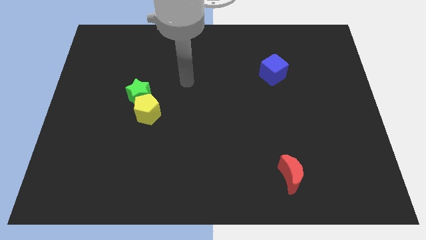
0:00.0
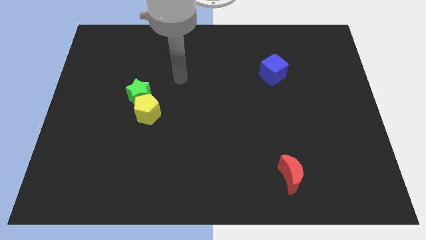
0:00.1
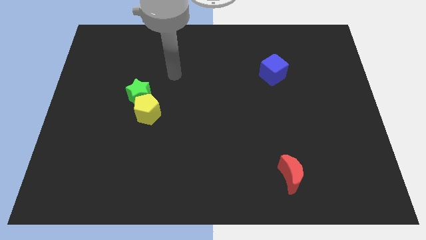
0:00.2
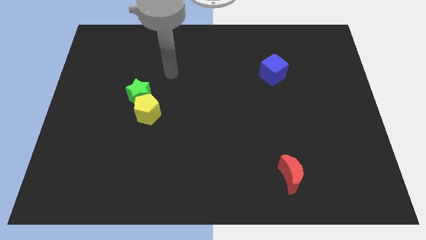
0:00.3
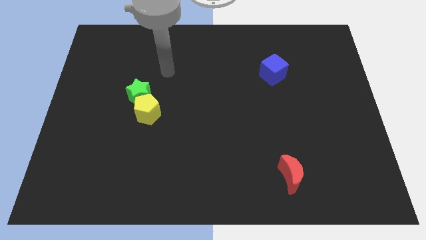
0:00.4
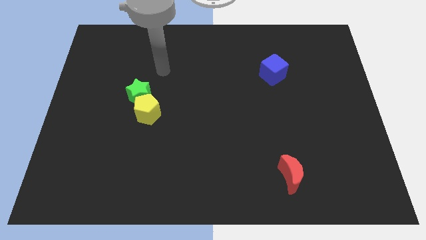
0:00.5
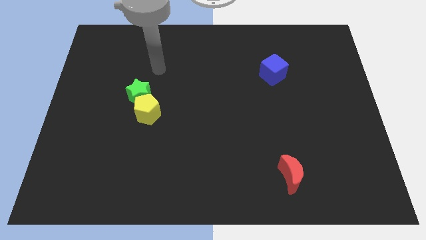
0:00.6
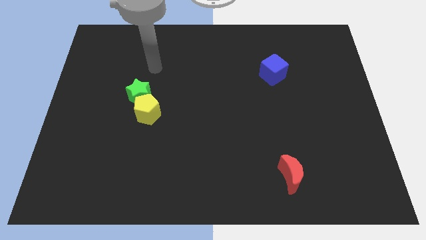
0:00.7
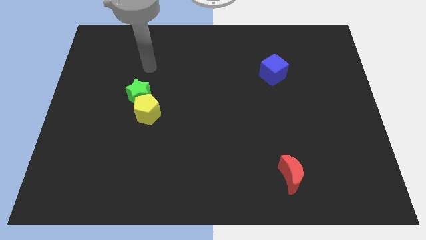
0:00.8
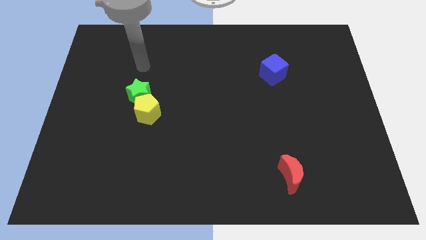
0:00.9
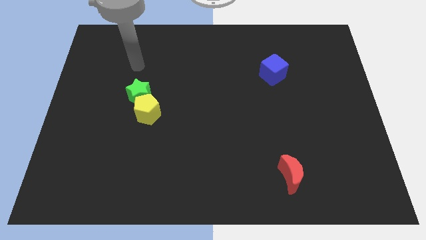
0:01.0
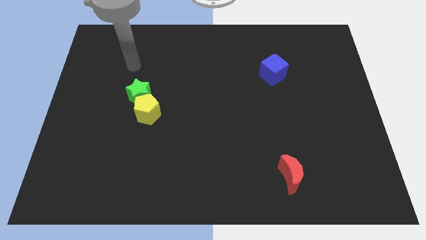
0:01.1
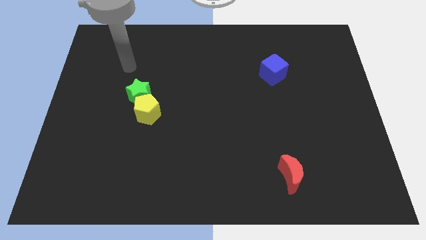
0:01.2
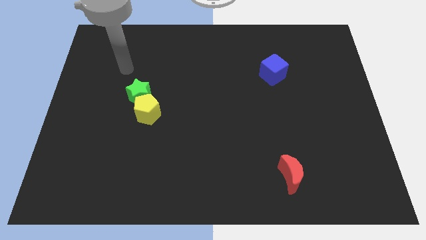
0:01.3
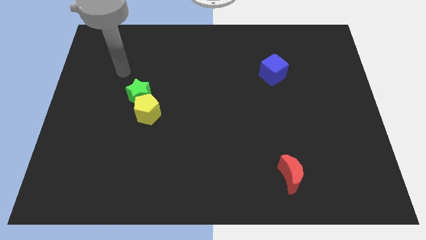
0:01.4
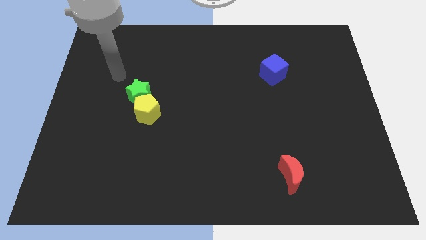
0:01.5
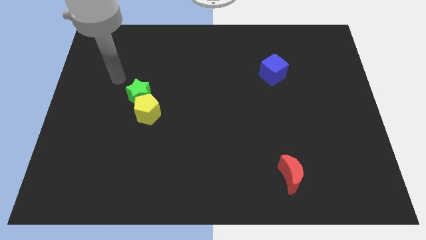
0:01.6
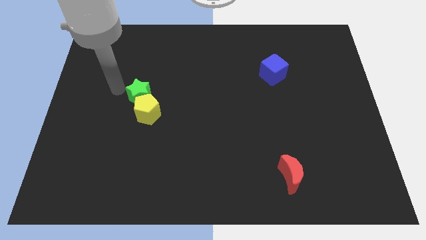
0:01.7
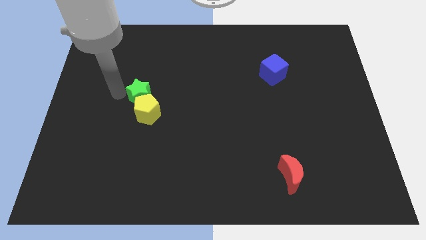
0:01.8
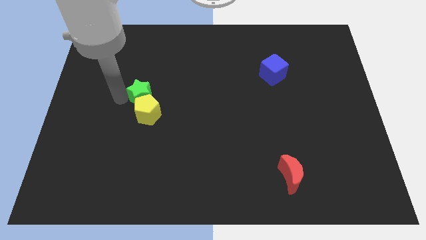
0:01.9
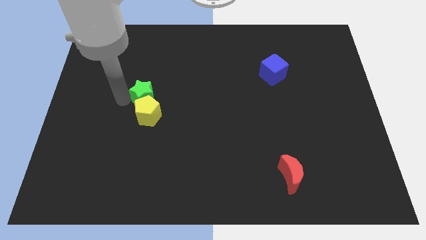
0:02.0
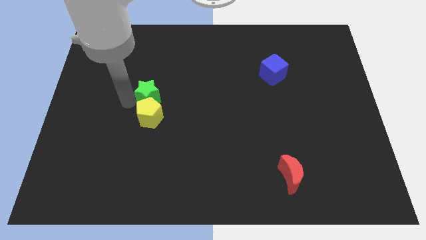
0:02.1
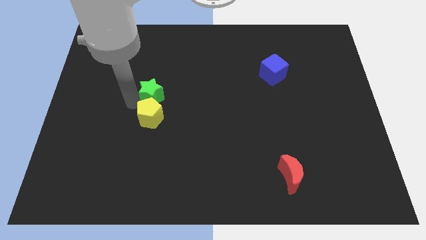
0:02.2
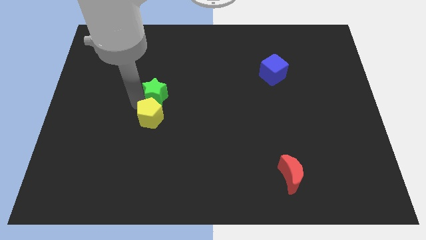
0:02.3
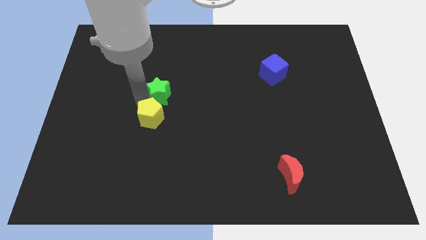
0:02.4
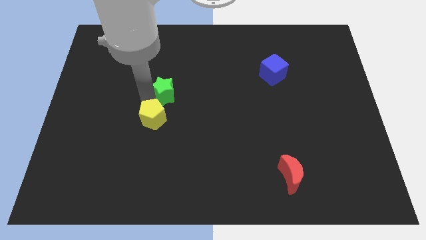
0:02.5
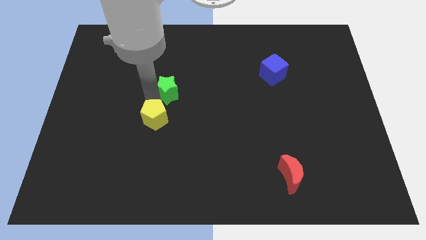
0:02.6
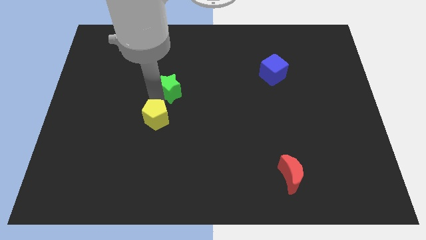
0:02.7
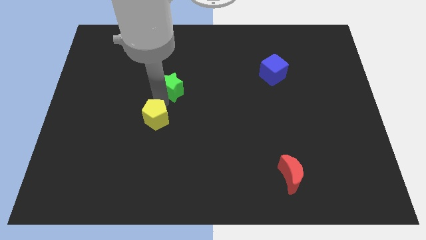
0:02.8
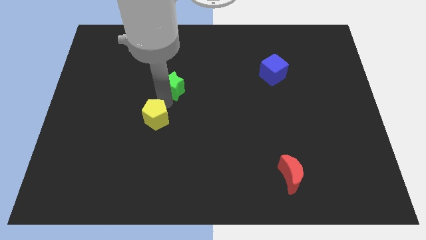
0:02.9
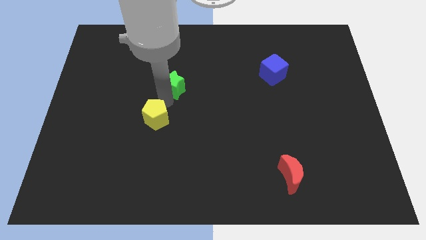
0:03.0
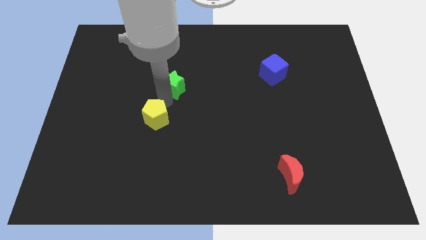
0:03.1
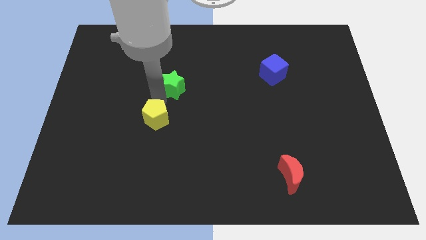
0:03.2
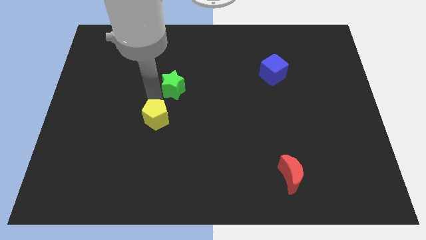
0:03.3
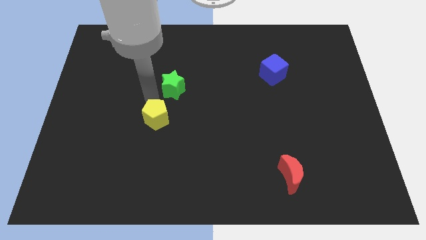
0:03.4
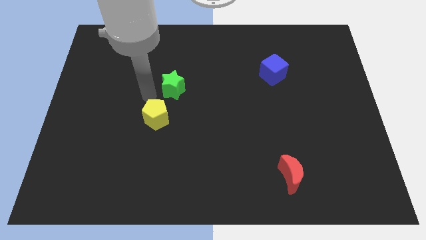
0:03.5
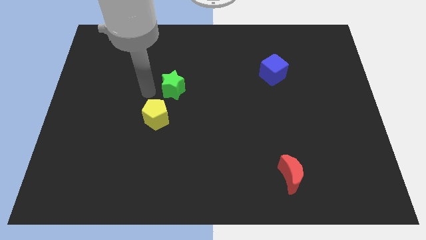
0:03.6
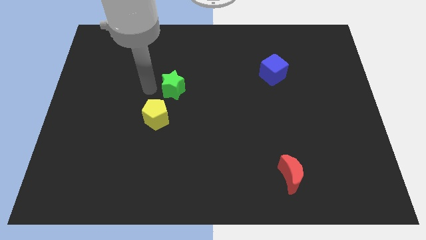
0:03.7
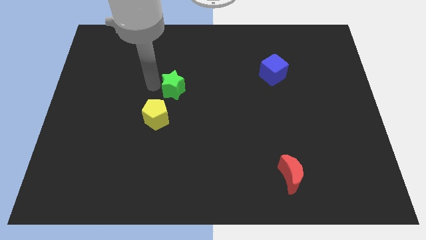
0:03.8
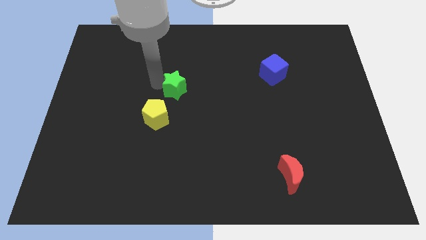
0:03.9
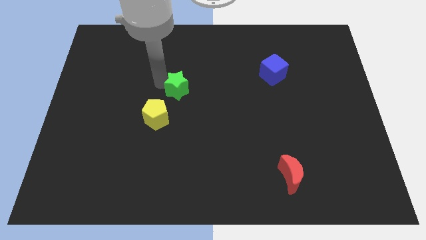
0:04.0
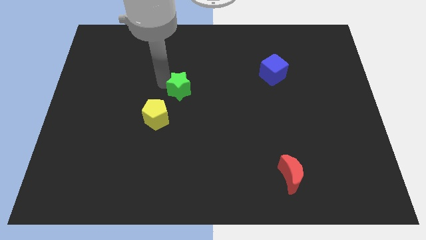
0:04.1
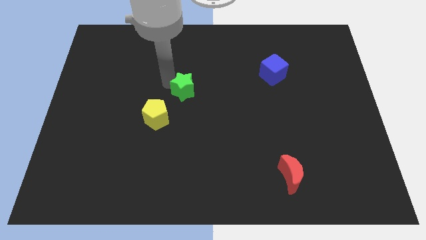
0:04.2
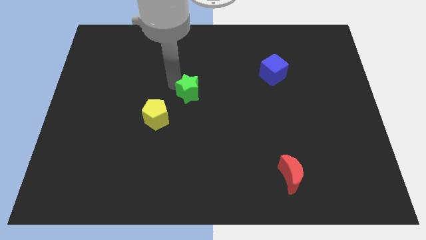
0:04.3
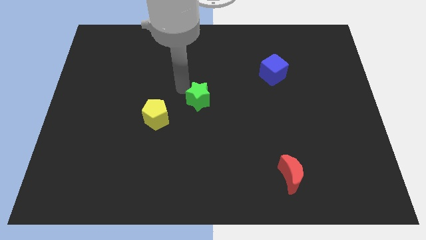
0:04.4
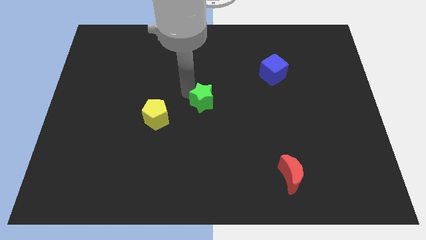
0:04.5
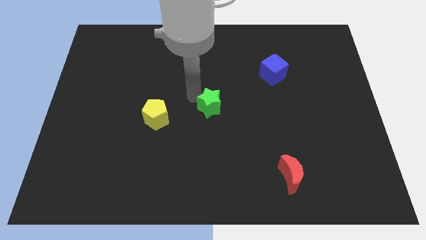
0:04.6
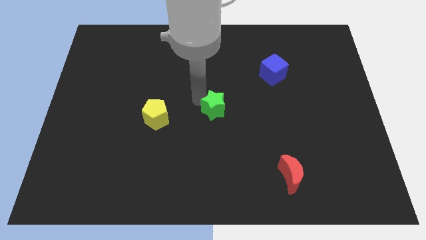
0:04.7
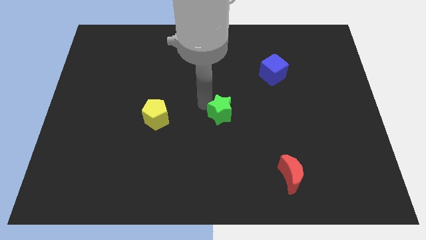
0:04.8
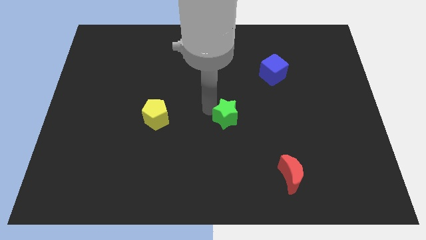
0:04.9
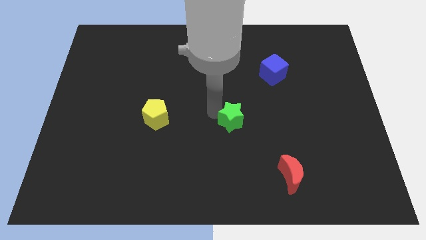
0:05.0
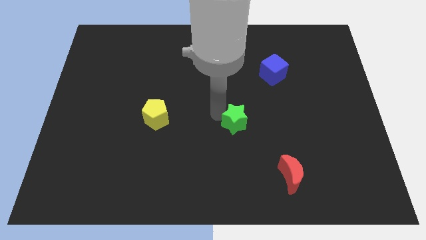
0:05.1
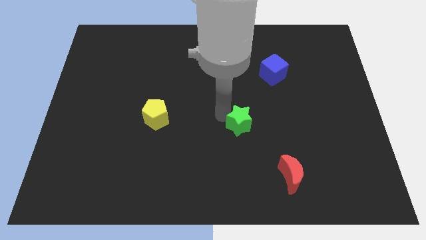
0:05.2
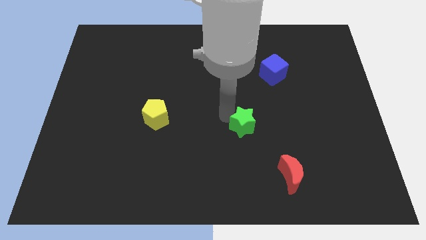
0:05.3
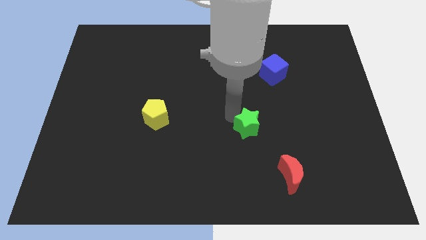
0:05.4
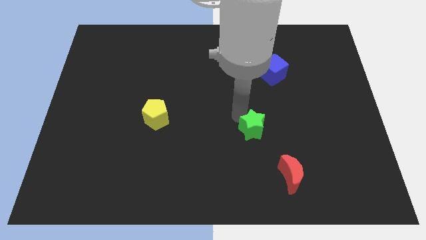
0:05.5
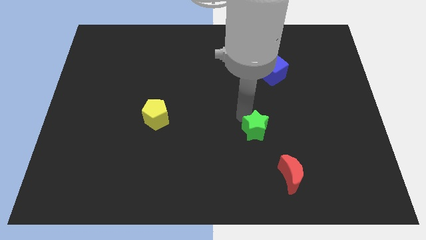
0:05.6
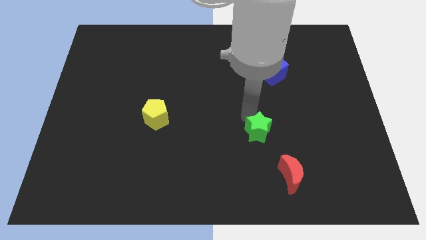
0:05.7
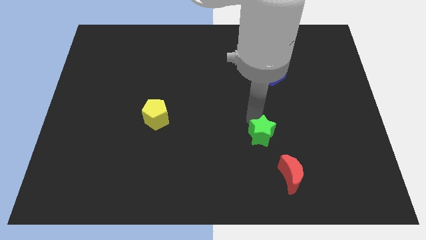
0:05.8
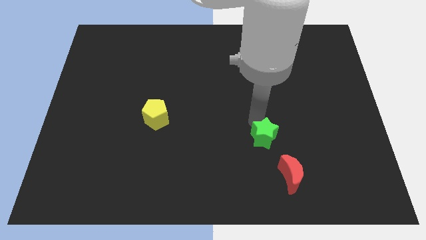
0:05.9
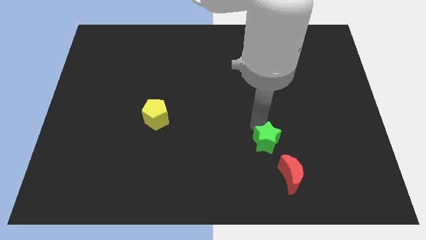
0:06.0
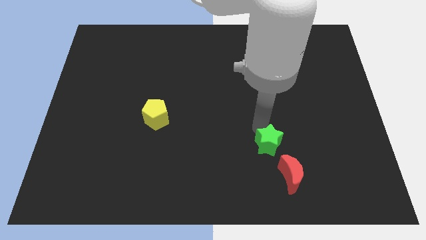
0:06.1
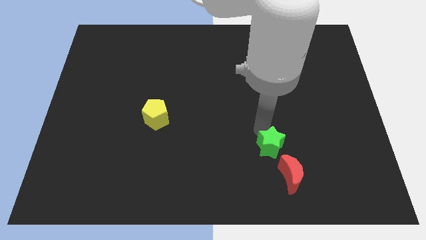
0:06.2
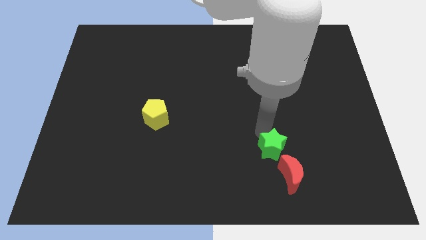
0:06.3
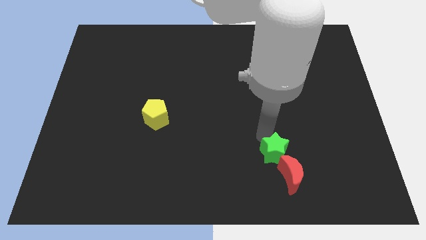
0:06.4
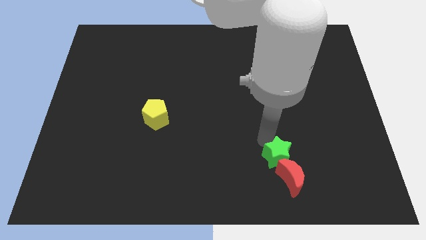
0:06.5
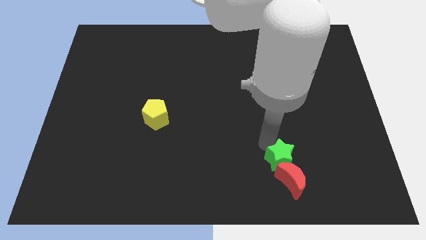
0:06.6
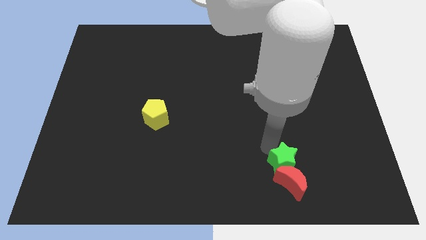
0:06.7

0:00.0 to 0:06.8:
put the green star to the red moon

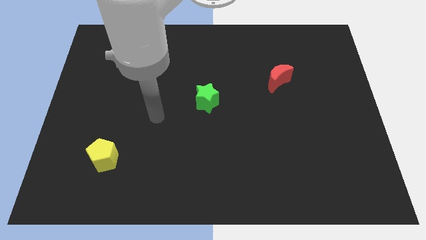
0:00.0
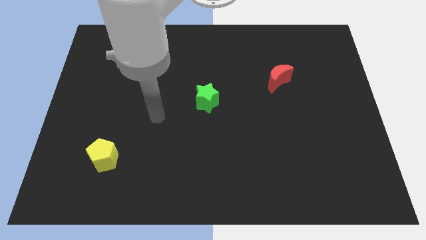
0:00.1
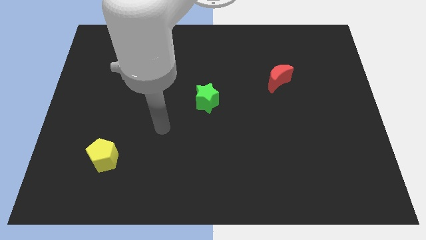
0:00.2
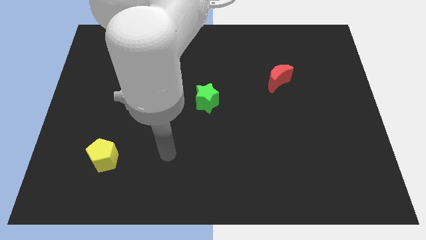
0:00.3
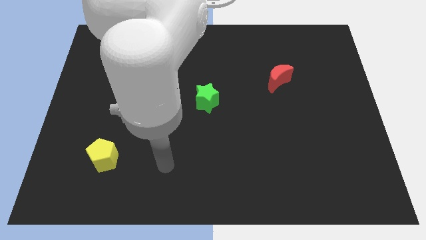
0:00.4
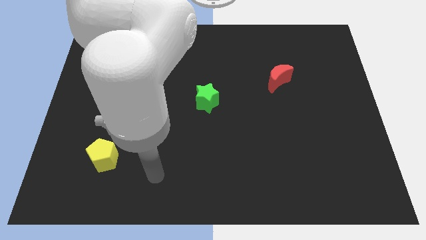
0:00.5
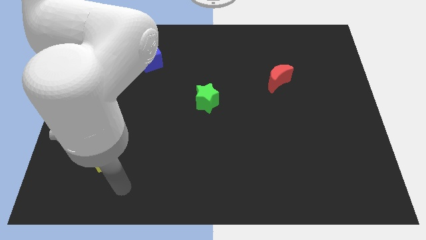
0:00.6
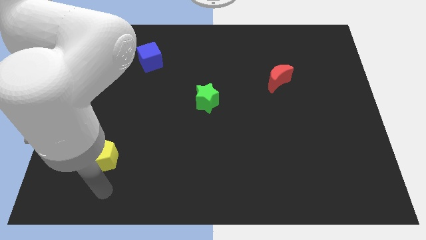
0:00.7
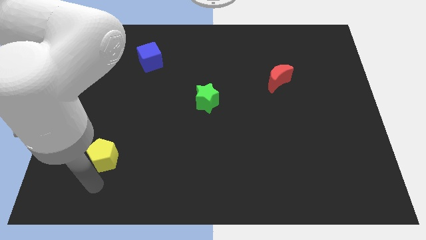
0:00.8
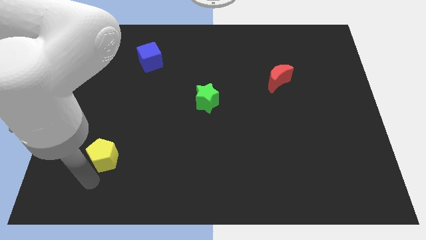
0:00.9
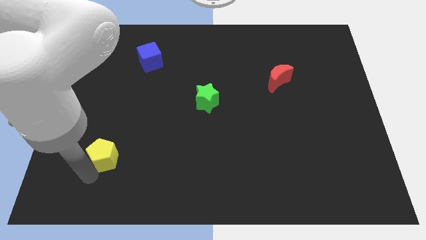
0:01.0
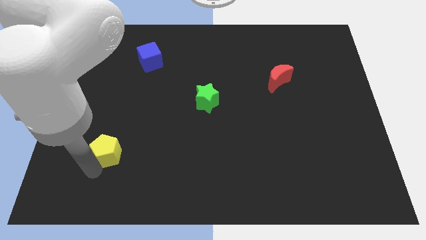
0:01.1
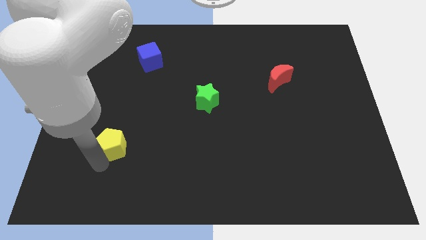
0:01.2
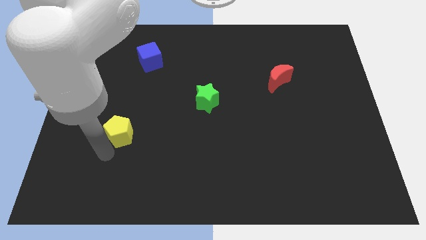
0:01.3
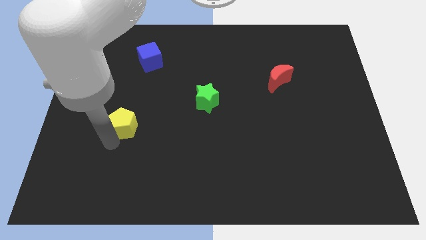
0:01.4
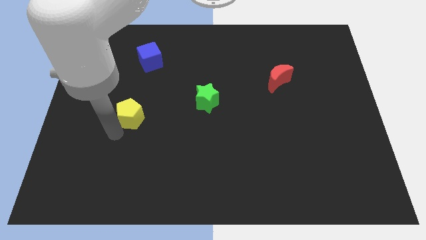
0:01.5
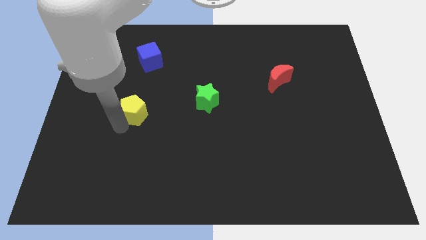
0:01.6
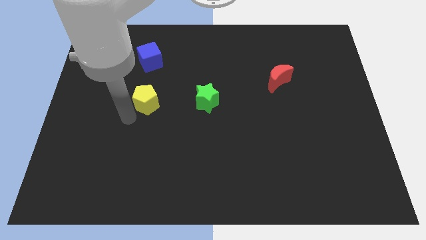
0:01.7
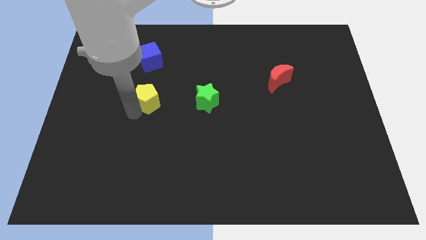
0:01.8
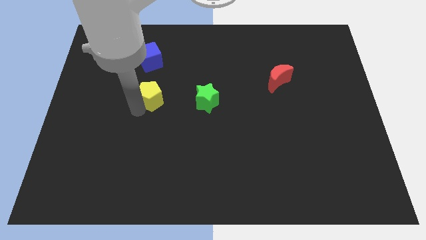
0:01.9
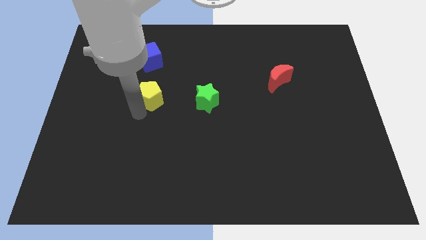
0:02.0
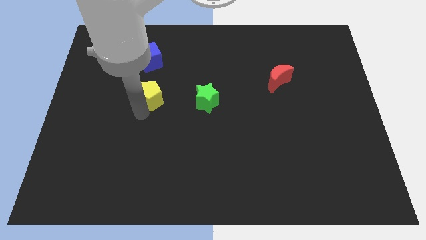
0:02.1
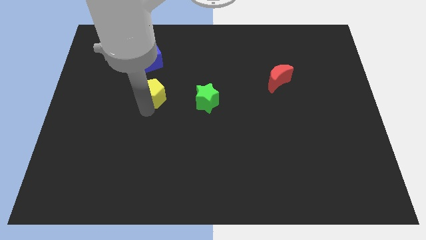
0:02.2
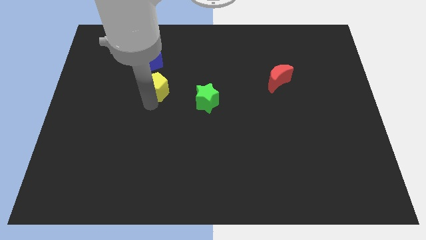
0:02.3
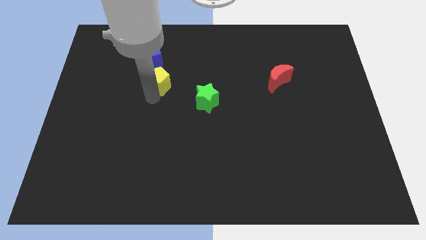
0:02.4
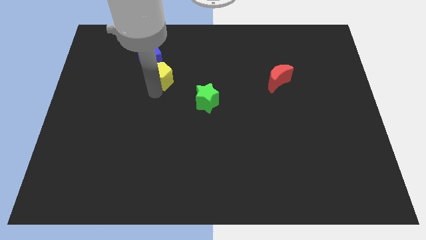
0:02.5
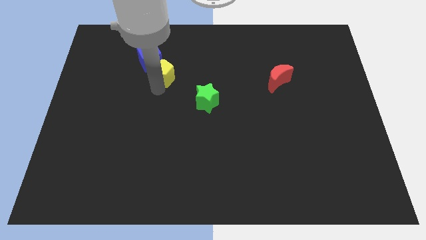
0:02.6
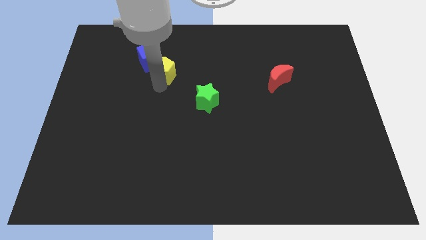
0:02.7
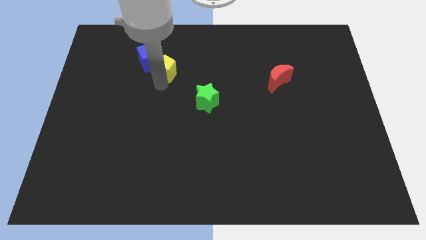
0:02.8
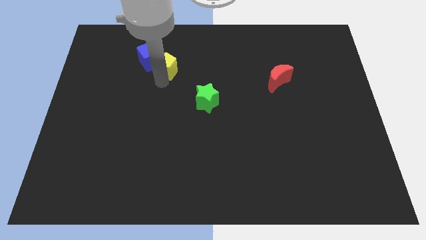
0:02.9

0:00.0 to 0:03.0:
push the yellow pentagon to the blue block
